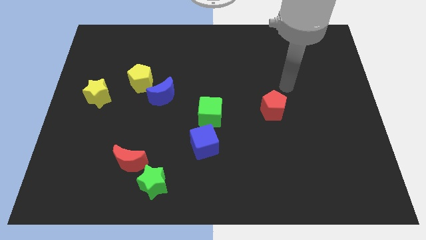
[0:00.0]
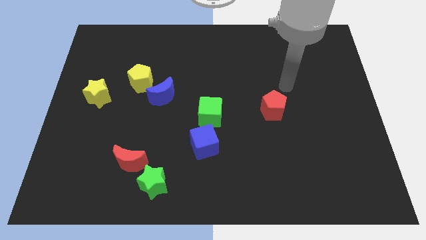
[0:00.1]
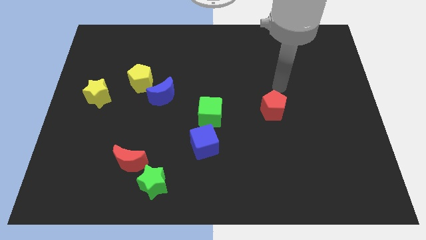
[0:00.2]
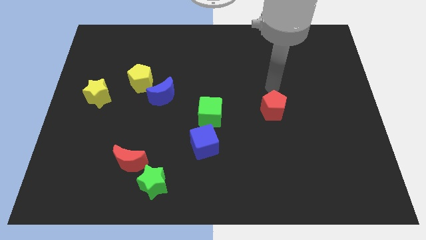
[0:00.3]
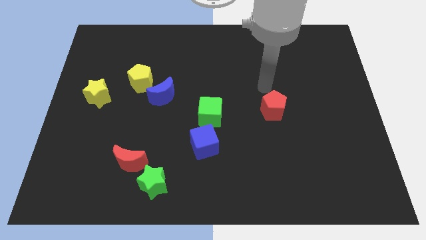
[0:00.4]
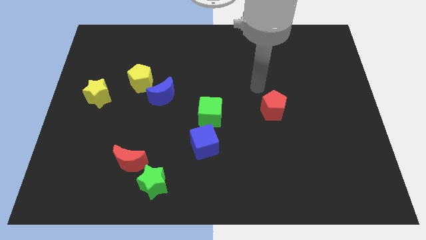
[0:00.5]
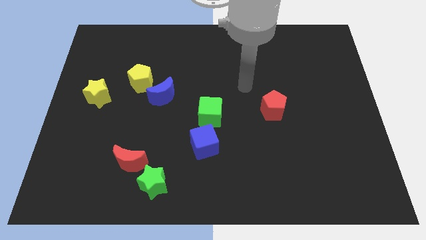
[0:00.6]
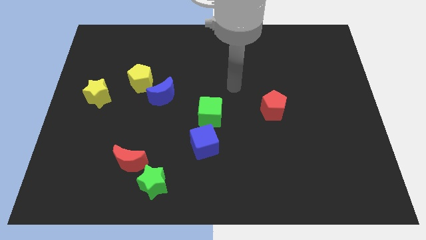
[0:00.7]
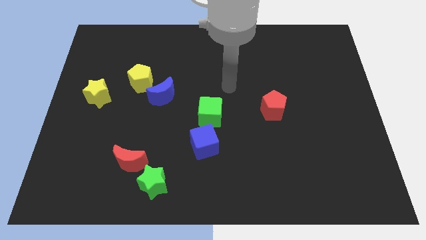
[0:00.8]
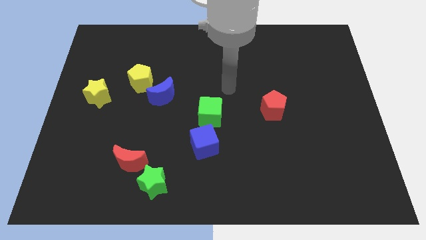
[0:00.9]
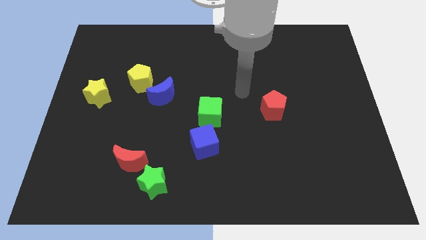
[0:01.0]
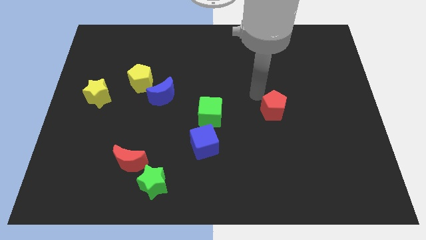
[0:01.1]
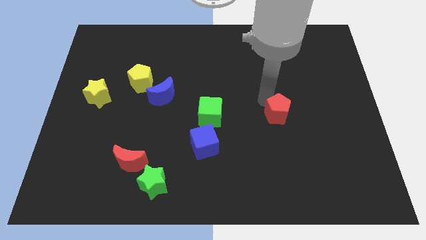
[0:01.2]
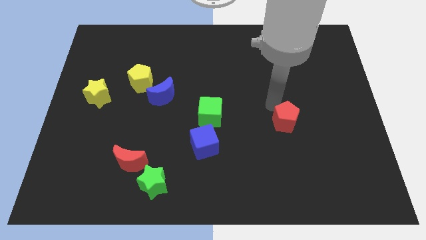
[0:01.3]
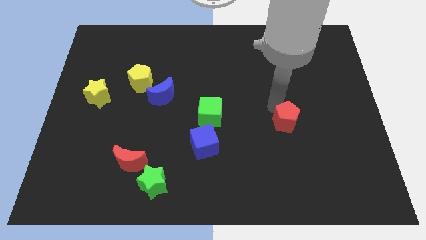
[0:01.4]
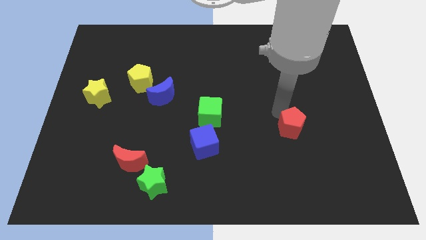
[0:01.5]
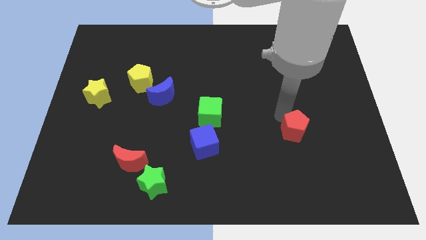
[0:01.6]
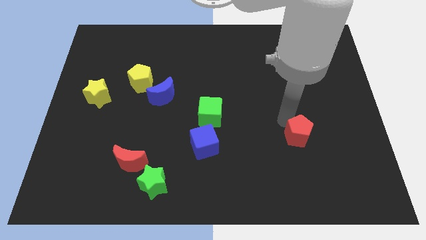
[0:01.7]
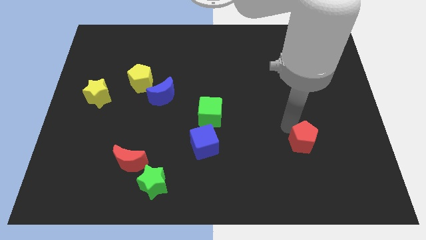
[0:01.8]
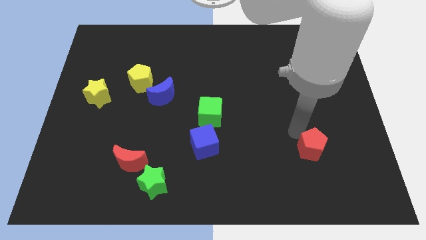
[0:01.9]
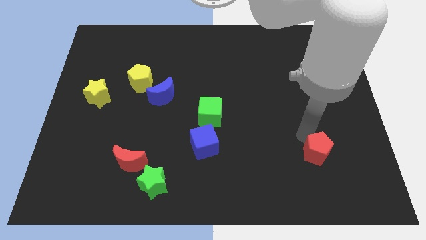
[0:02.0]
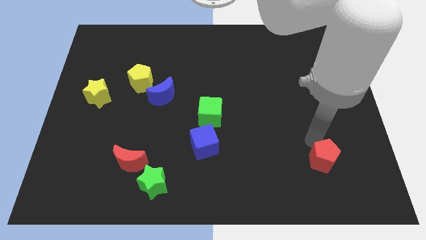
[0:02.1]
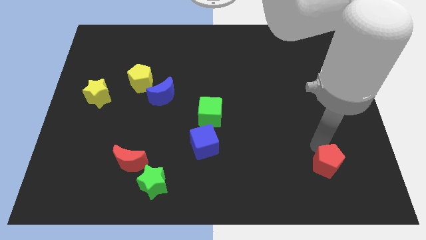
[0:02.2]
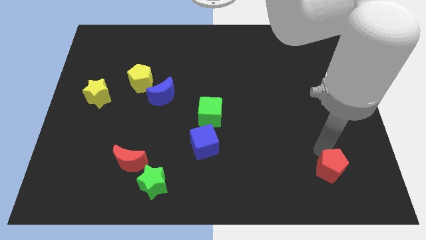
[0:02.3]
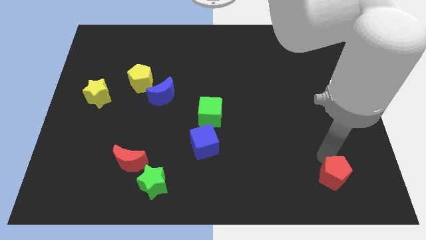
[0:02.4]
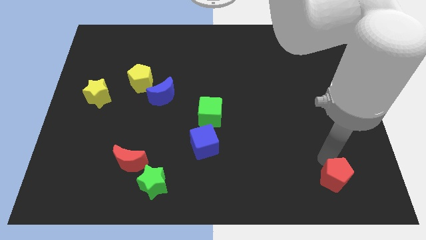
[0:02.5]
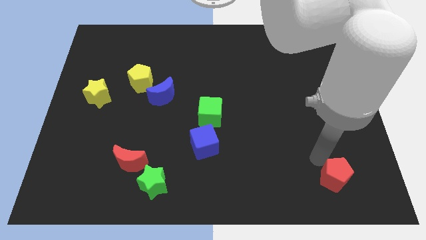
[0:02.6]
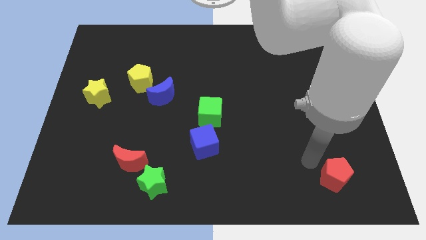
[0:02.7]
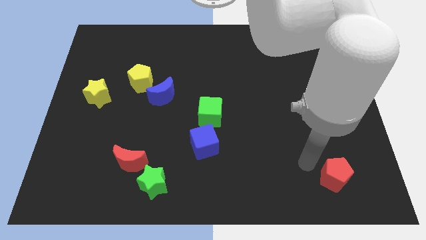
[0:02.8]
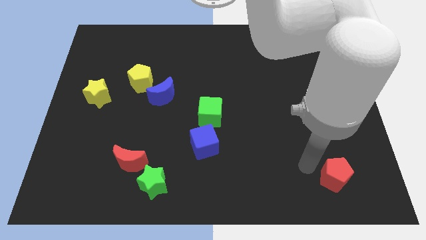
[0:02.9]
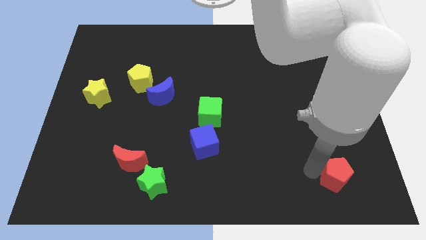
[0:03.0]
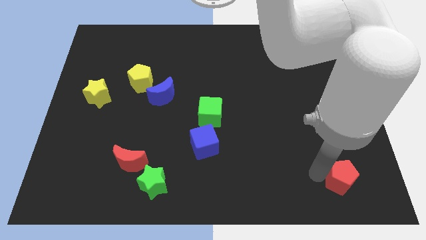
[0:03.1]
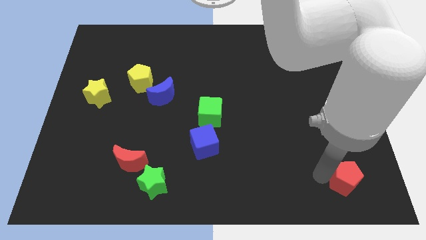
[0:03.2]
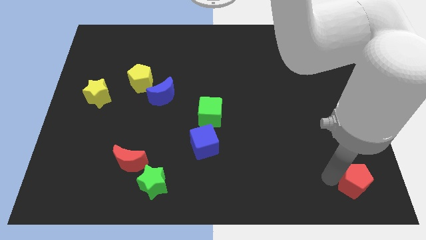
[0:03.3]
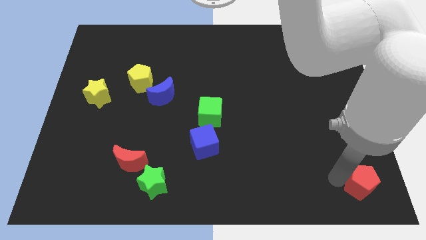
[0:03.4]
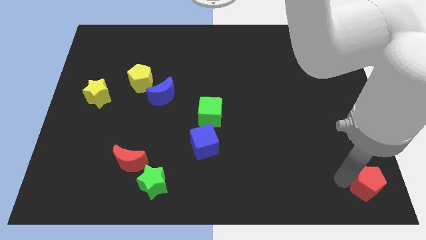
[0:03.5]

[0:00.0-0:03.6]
push the red pentagon towards the bottom right side of the table

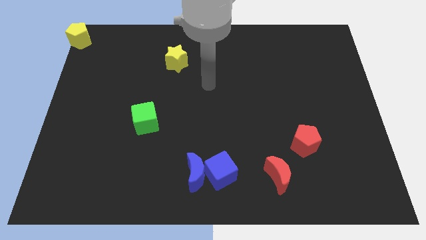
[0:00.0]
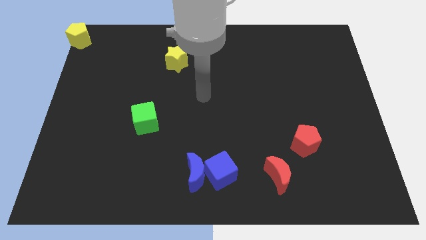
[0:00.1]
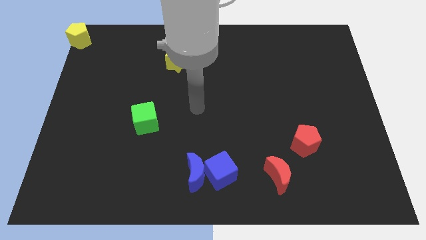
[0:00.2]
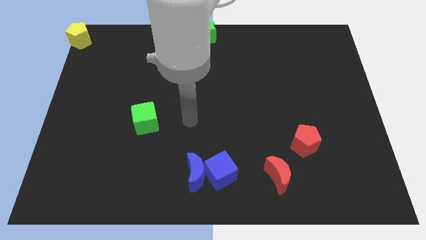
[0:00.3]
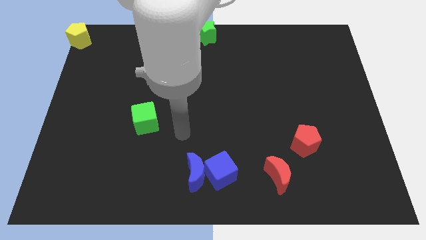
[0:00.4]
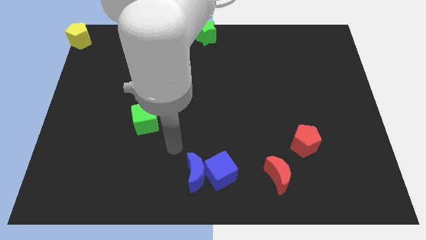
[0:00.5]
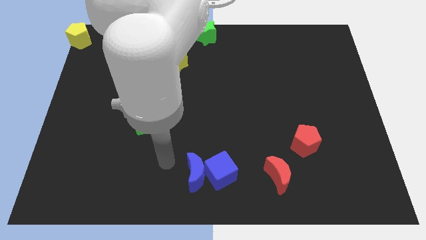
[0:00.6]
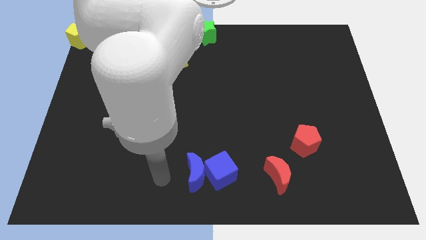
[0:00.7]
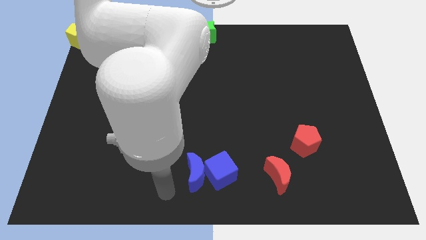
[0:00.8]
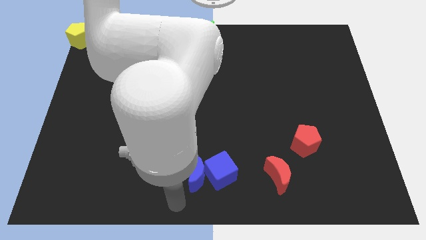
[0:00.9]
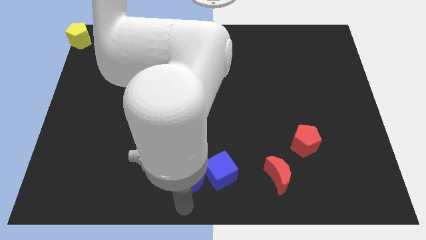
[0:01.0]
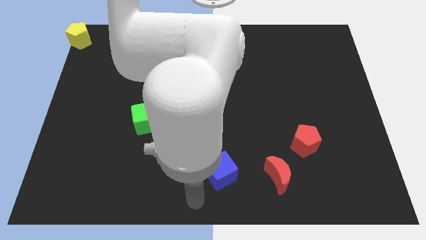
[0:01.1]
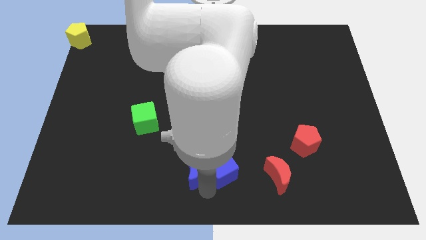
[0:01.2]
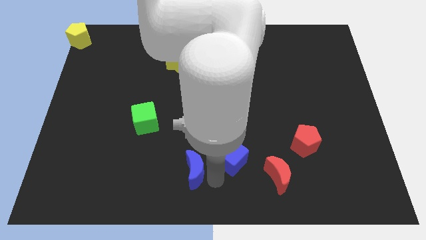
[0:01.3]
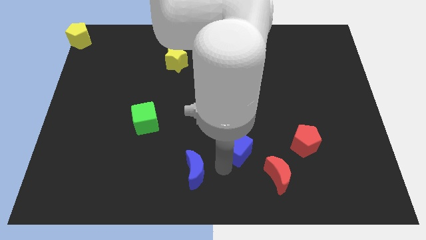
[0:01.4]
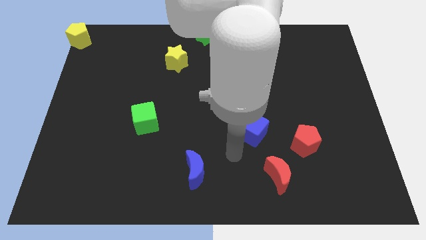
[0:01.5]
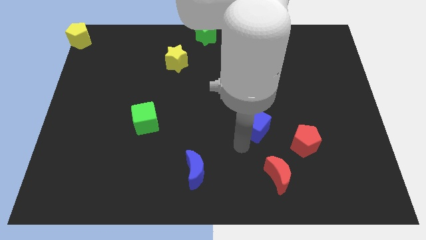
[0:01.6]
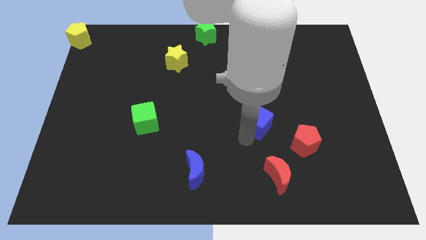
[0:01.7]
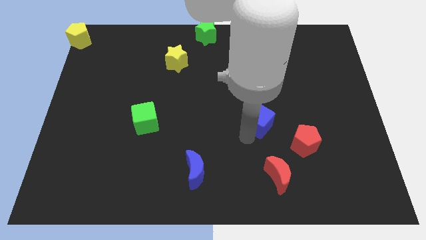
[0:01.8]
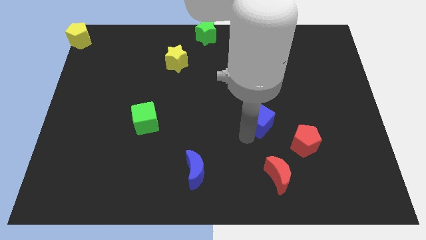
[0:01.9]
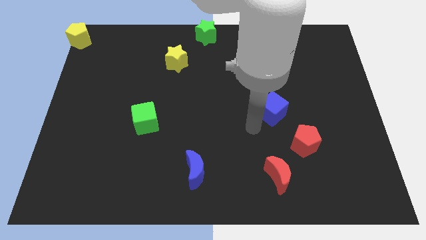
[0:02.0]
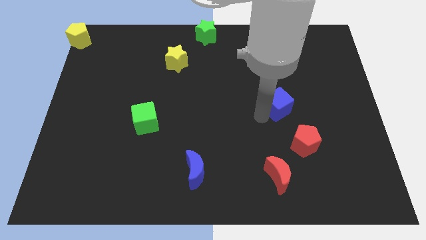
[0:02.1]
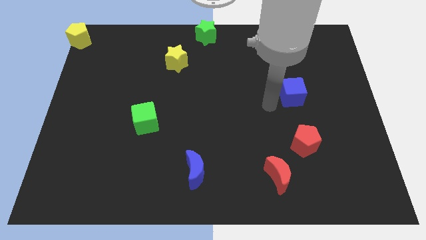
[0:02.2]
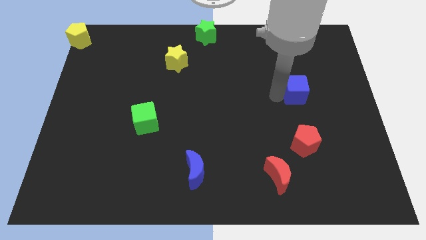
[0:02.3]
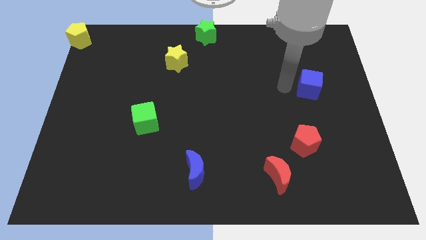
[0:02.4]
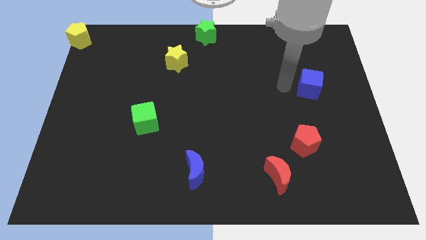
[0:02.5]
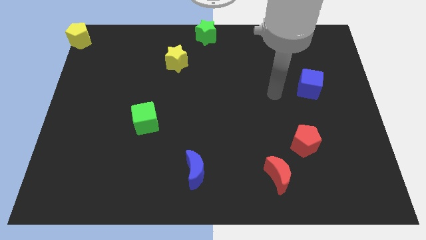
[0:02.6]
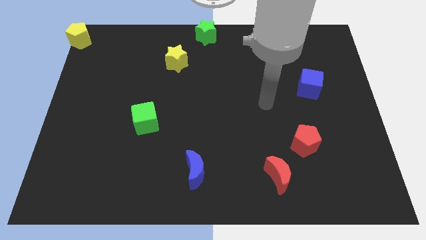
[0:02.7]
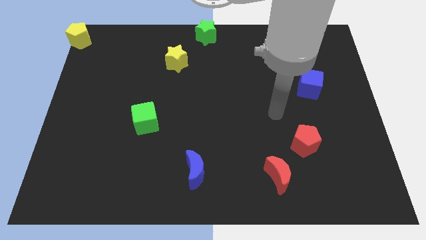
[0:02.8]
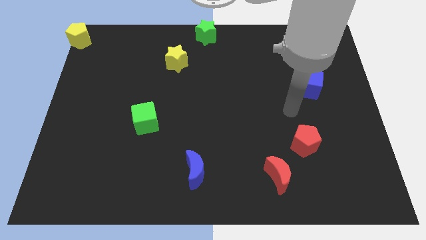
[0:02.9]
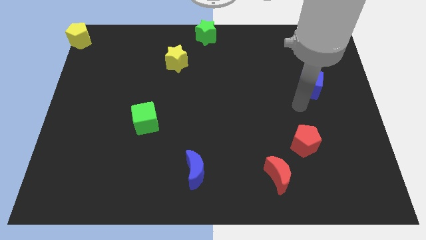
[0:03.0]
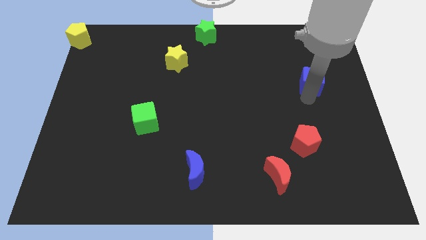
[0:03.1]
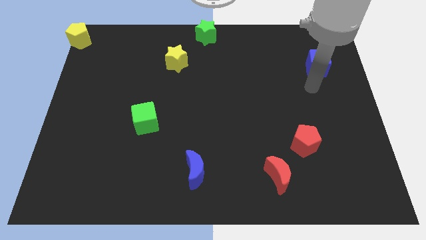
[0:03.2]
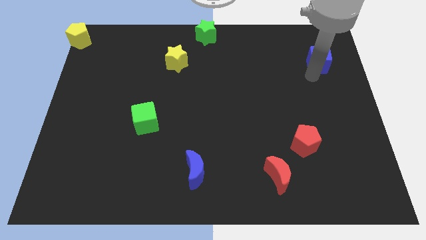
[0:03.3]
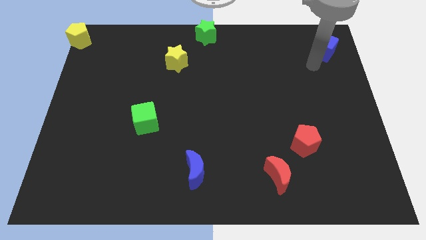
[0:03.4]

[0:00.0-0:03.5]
move the blue cube towards the top right corner of the board

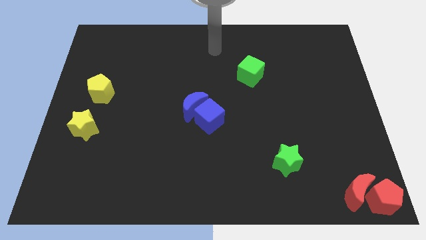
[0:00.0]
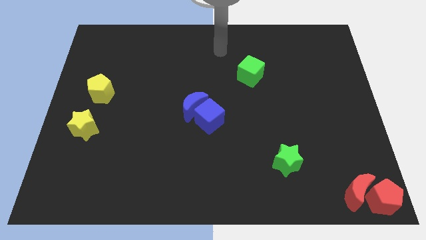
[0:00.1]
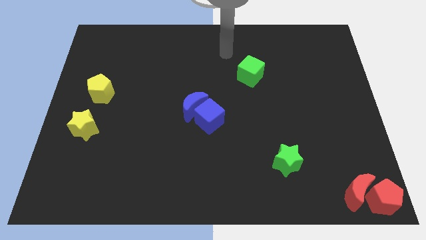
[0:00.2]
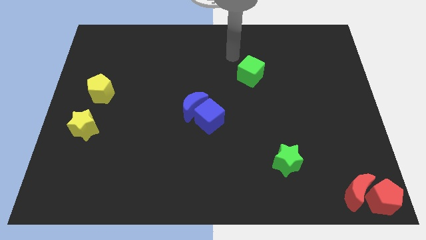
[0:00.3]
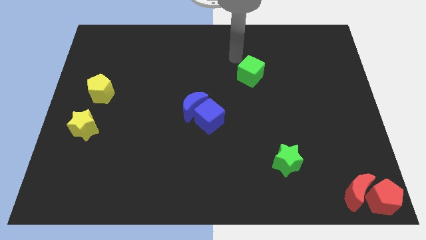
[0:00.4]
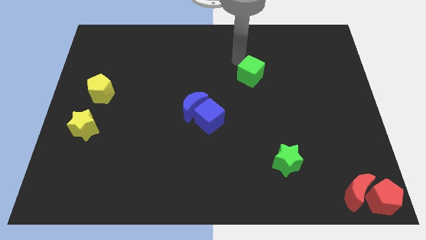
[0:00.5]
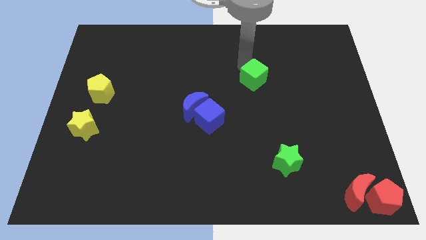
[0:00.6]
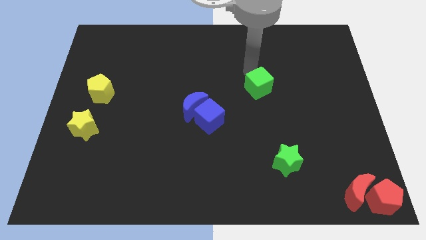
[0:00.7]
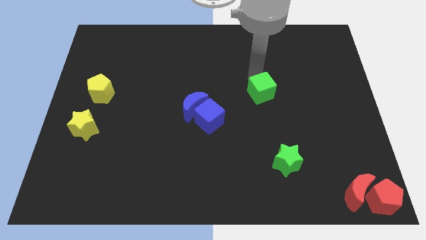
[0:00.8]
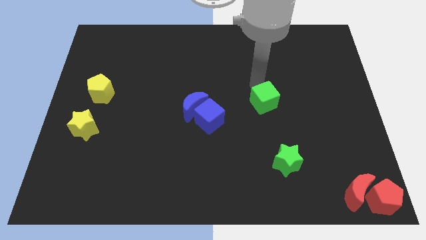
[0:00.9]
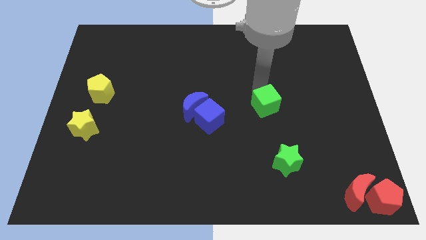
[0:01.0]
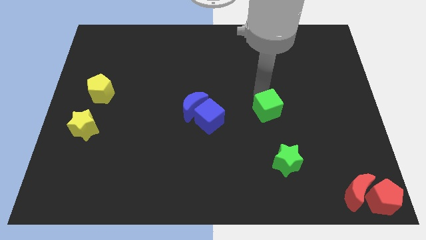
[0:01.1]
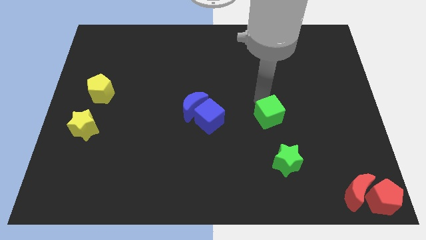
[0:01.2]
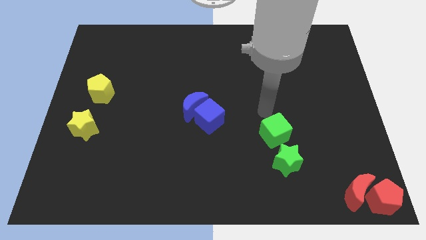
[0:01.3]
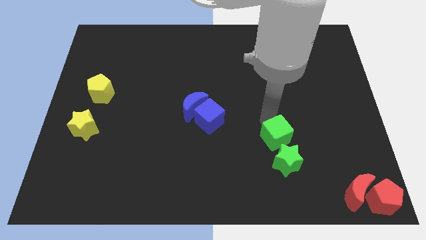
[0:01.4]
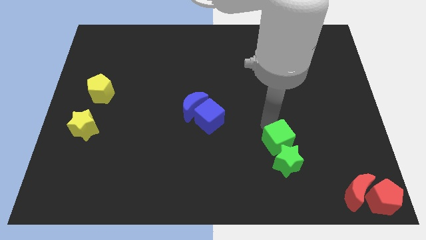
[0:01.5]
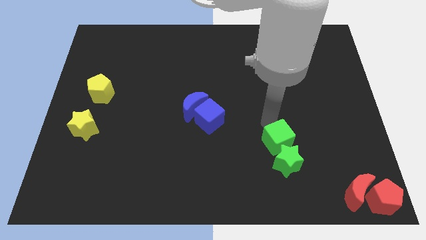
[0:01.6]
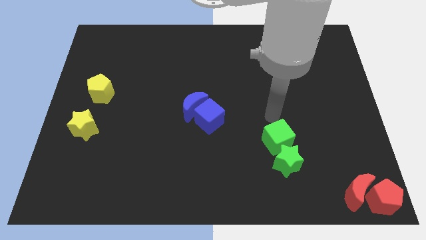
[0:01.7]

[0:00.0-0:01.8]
put green cube on top of the green star

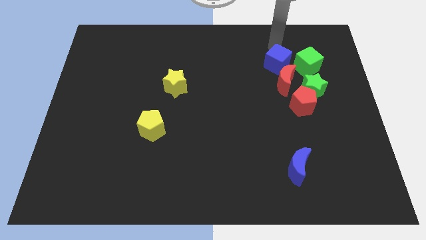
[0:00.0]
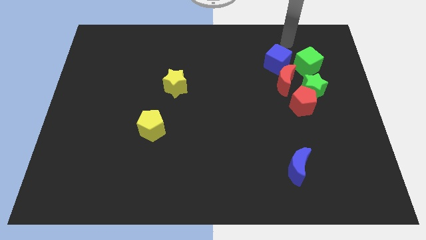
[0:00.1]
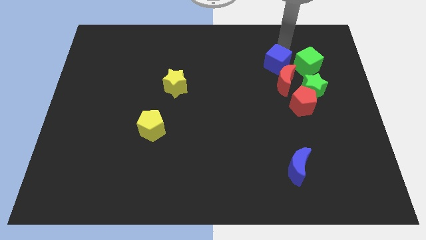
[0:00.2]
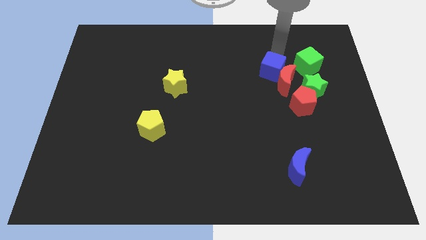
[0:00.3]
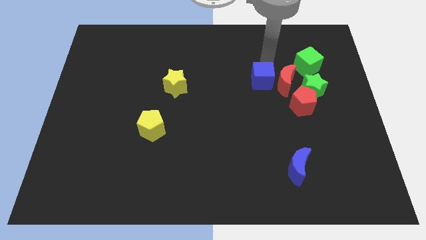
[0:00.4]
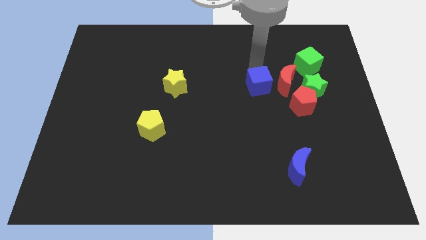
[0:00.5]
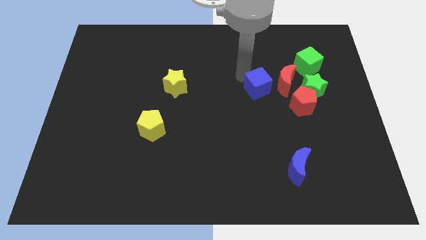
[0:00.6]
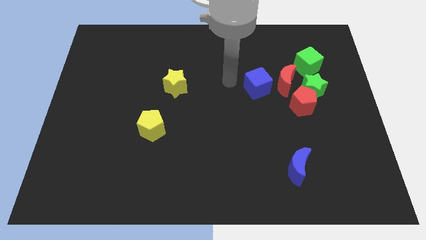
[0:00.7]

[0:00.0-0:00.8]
move blue cube to the left of the red moon
